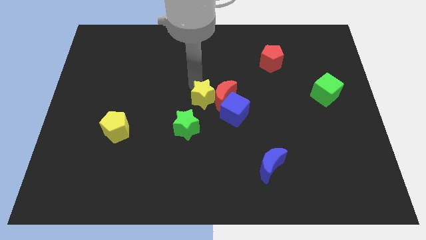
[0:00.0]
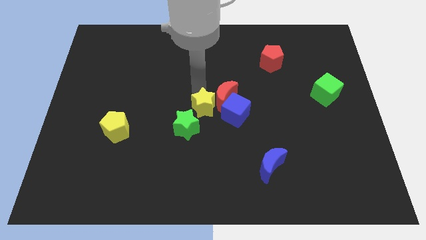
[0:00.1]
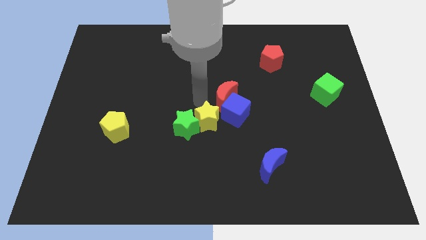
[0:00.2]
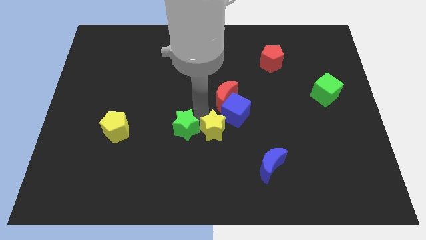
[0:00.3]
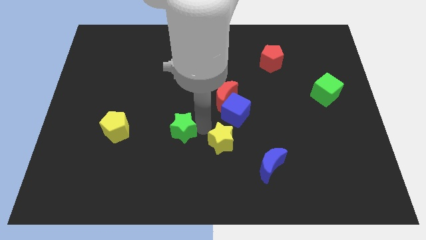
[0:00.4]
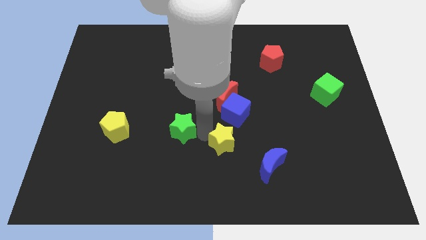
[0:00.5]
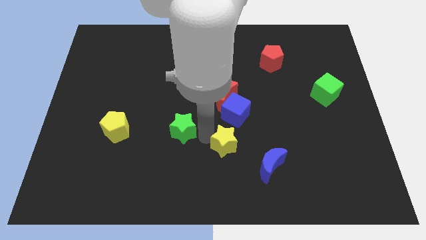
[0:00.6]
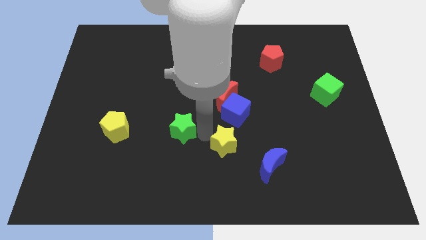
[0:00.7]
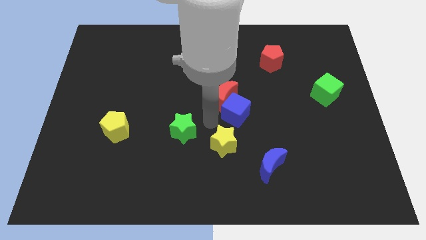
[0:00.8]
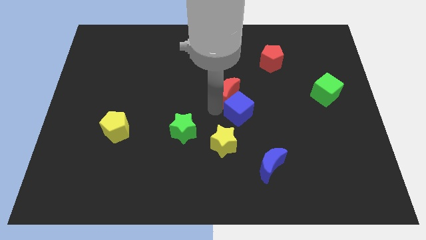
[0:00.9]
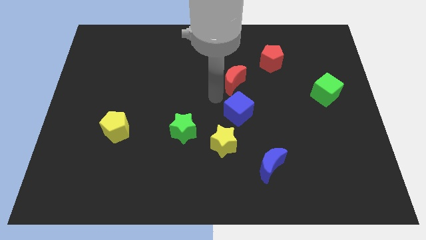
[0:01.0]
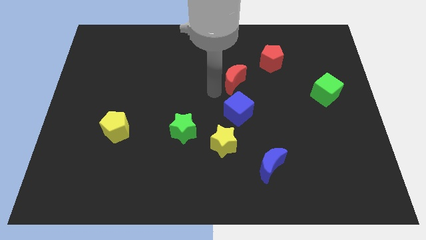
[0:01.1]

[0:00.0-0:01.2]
place the yellow star diagonal to the blue cube

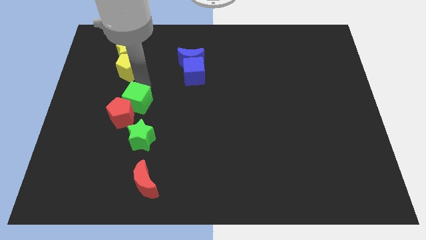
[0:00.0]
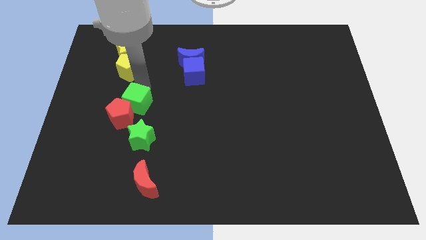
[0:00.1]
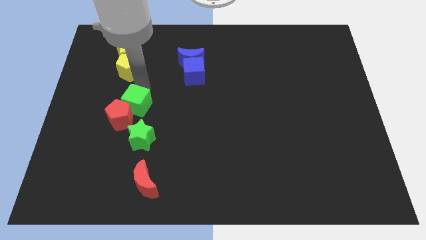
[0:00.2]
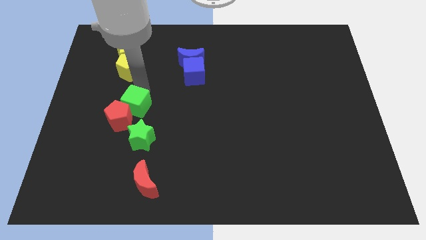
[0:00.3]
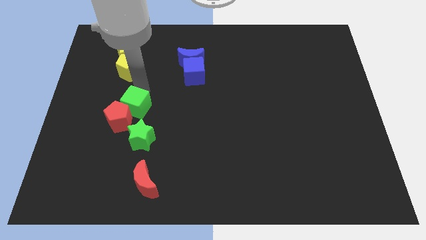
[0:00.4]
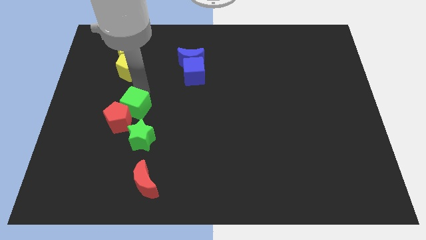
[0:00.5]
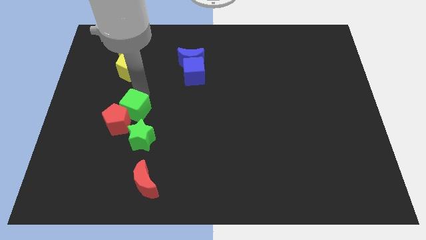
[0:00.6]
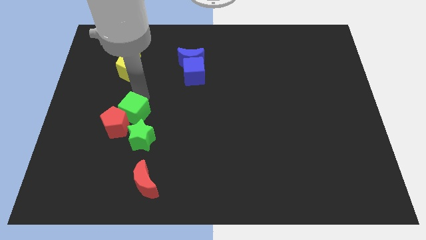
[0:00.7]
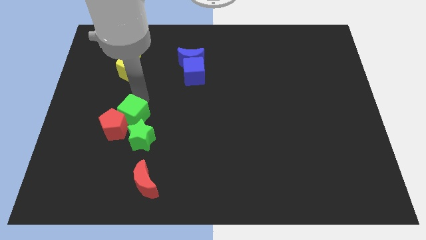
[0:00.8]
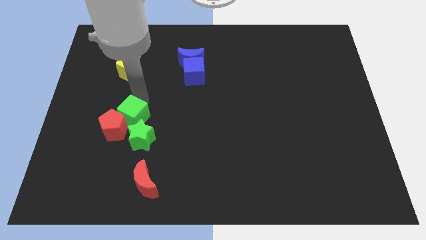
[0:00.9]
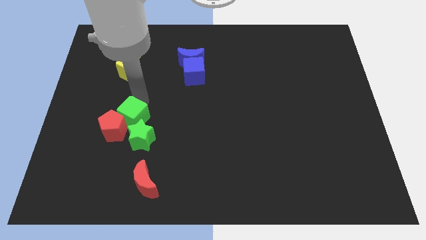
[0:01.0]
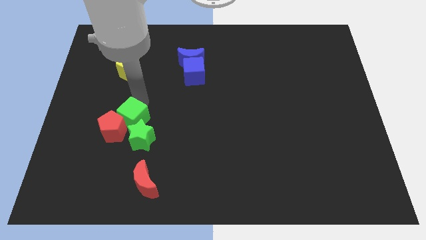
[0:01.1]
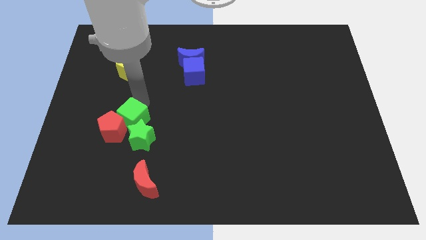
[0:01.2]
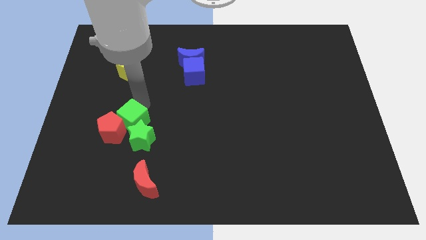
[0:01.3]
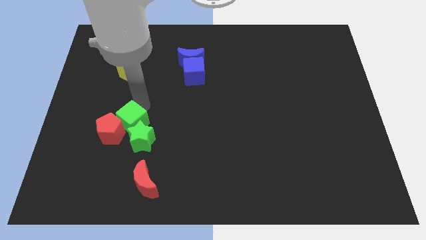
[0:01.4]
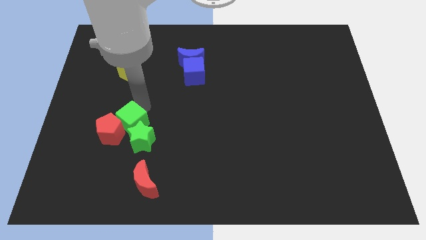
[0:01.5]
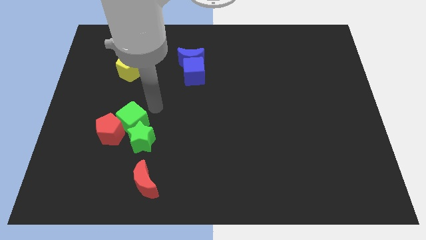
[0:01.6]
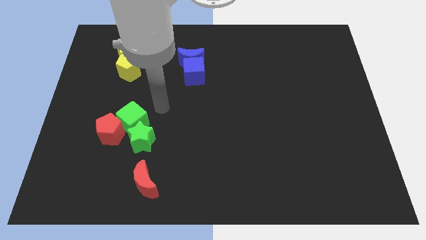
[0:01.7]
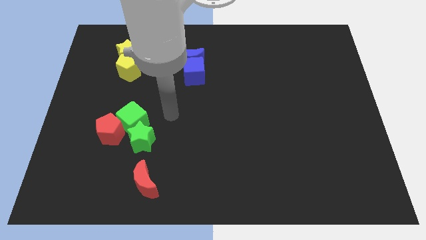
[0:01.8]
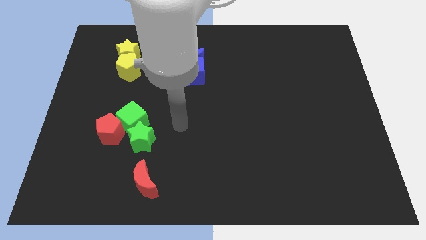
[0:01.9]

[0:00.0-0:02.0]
push the green cube above the green star

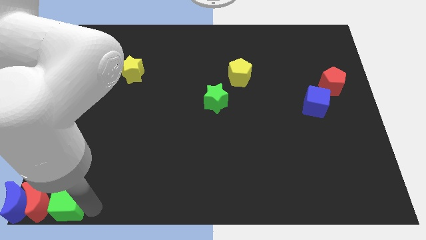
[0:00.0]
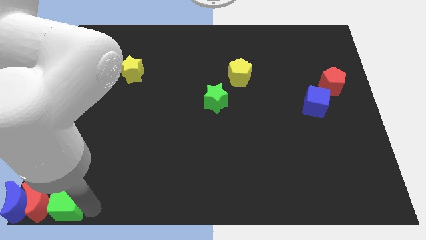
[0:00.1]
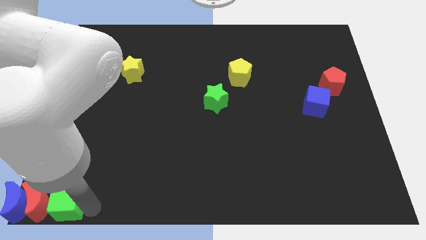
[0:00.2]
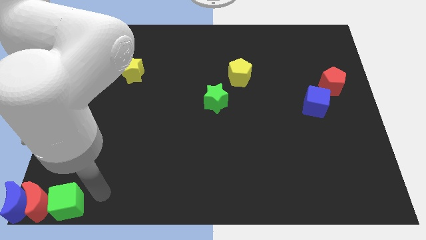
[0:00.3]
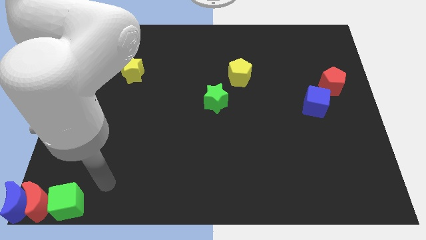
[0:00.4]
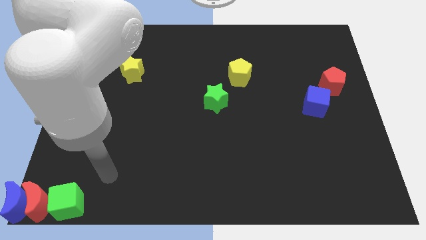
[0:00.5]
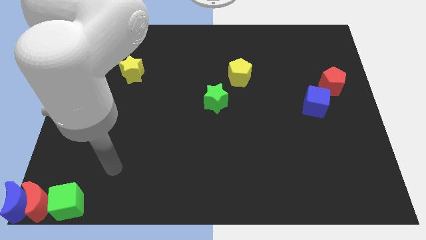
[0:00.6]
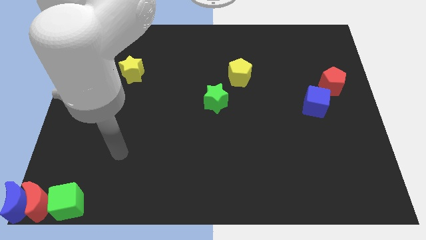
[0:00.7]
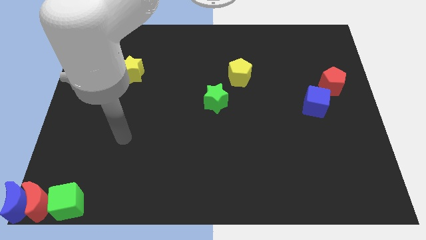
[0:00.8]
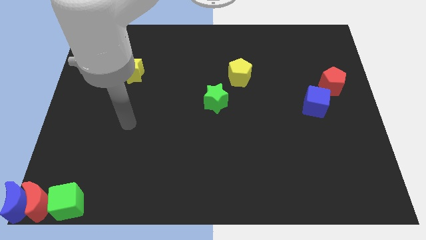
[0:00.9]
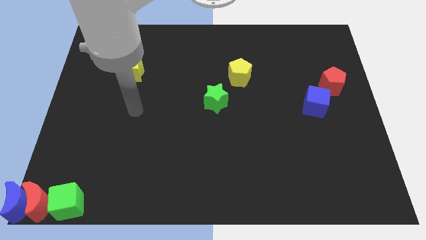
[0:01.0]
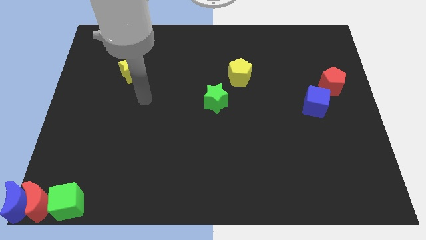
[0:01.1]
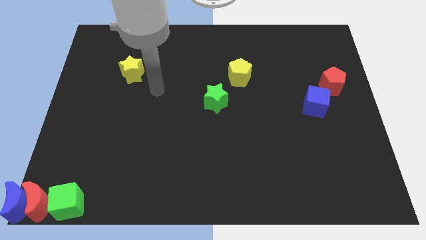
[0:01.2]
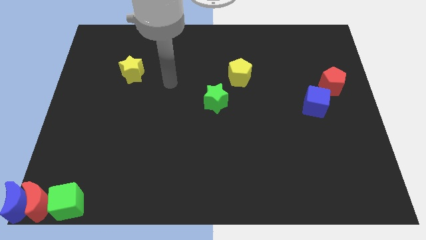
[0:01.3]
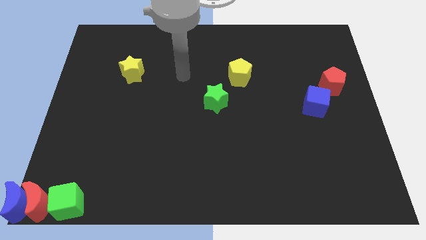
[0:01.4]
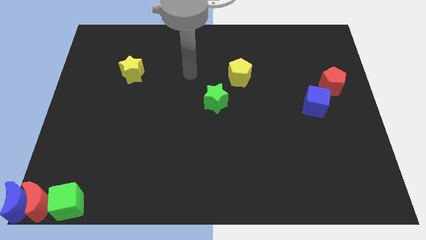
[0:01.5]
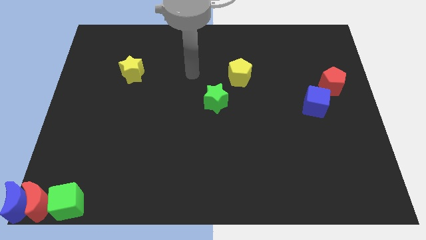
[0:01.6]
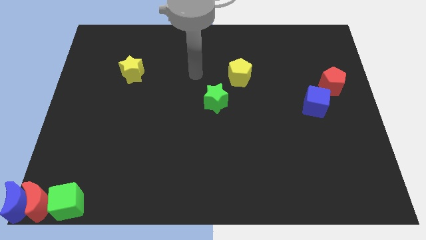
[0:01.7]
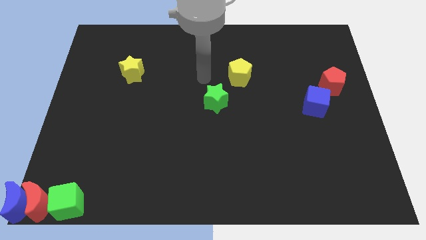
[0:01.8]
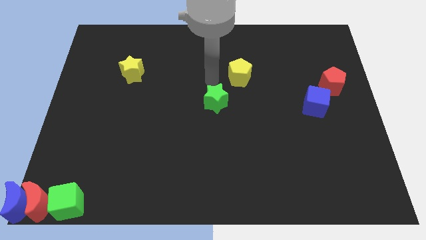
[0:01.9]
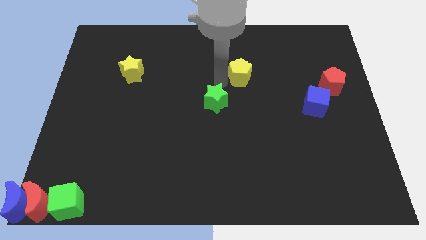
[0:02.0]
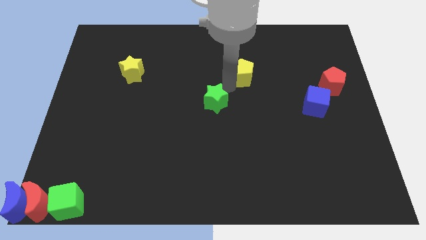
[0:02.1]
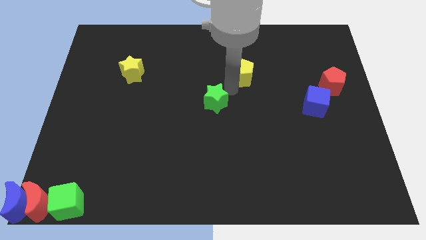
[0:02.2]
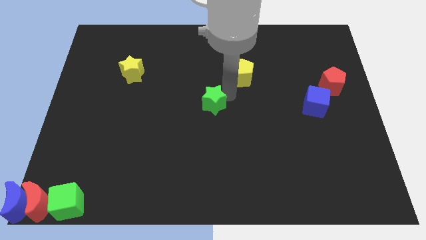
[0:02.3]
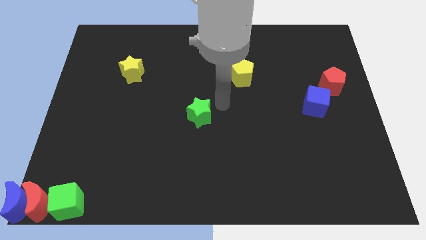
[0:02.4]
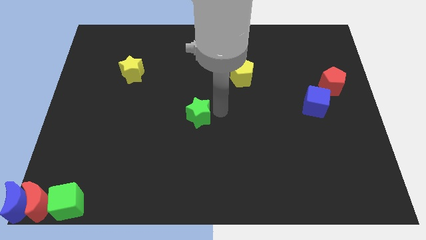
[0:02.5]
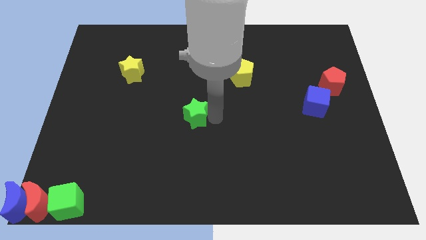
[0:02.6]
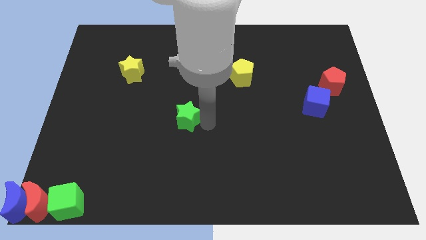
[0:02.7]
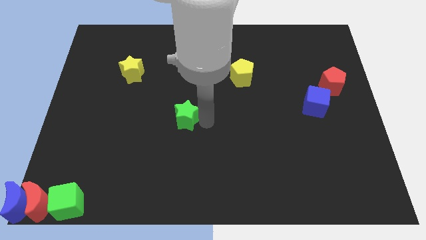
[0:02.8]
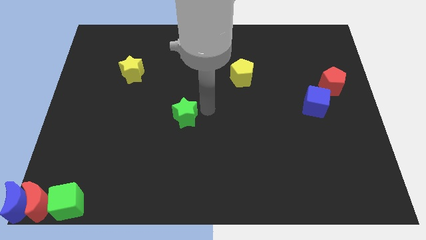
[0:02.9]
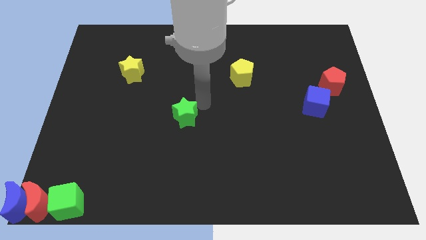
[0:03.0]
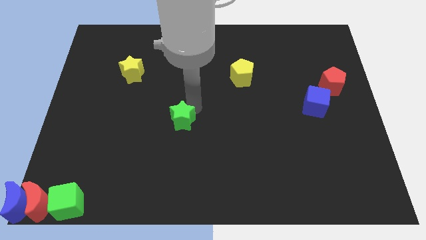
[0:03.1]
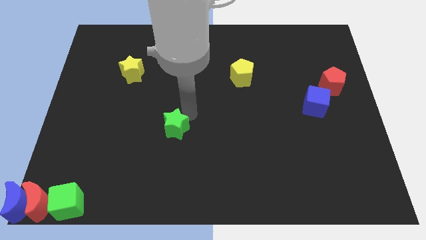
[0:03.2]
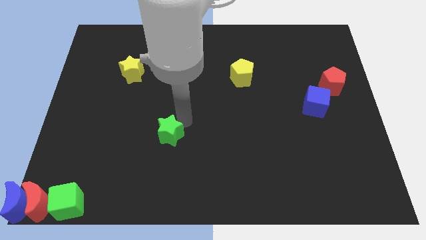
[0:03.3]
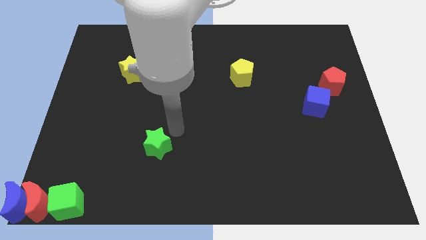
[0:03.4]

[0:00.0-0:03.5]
place the green star diagonally bottom right to the yellow star

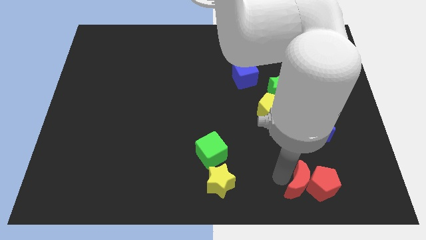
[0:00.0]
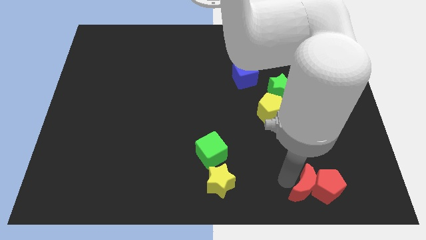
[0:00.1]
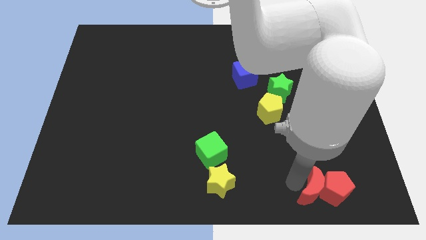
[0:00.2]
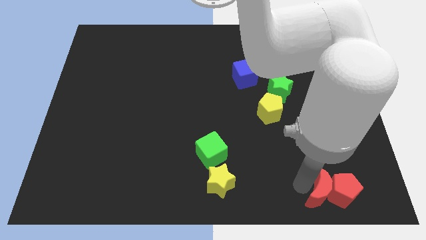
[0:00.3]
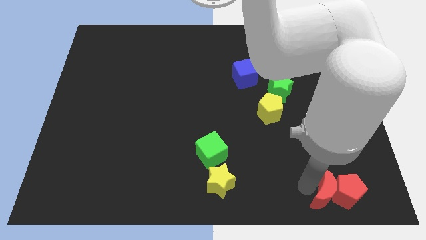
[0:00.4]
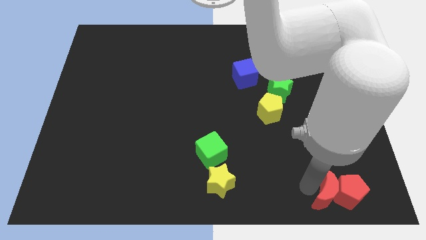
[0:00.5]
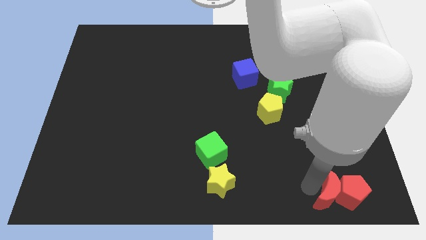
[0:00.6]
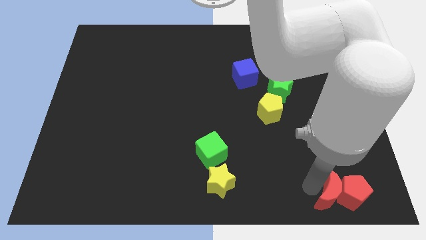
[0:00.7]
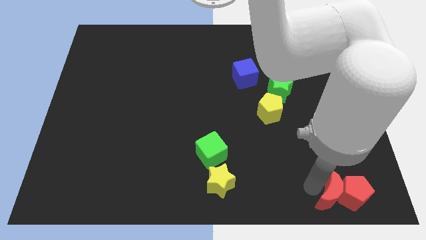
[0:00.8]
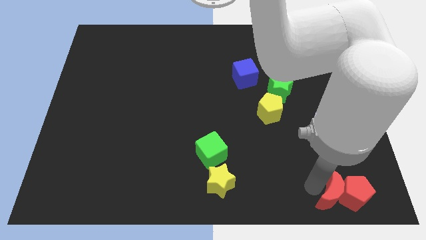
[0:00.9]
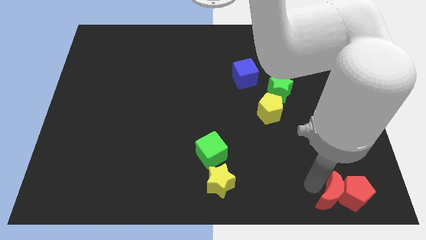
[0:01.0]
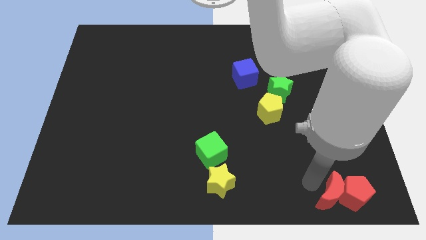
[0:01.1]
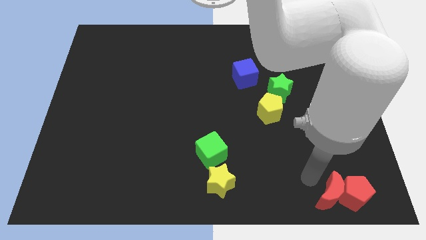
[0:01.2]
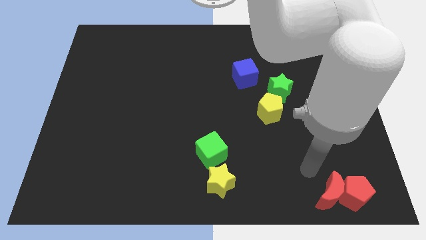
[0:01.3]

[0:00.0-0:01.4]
drag the red moon to the left side of the board

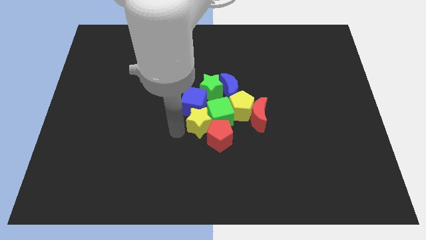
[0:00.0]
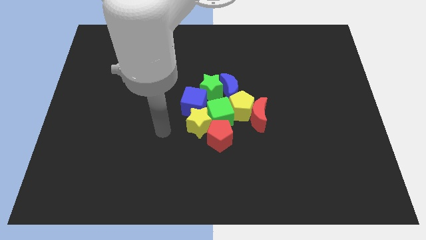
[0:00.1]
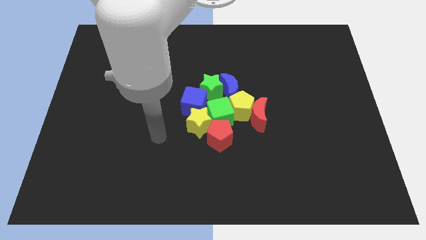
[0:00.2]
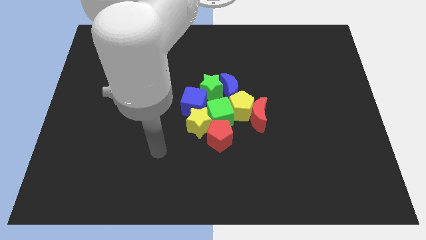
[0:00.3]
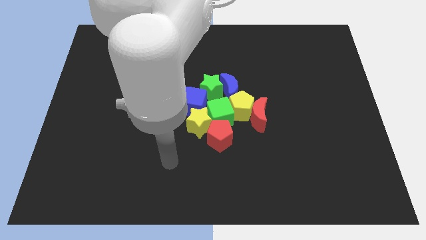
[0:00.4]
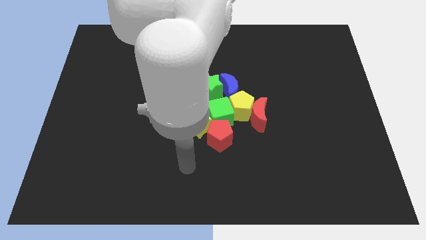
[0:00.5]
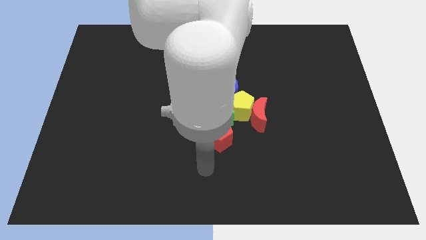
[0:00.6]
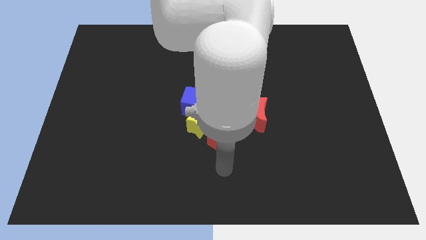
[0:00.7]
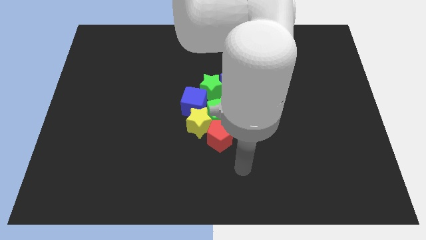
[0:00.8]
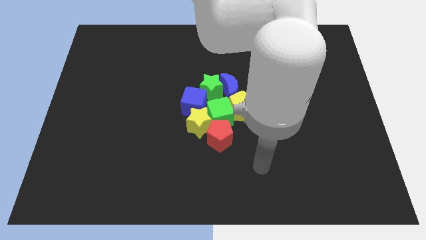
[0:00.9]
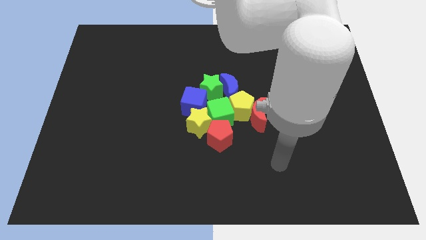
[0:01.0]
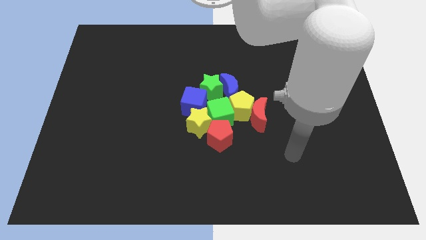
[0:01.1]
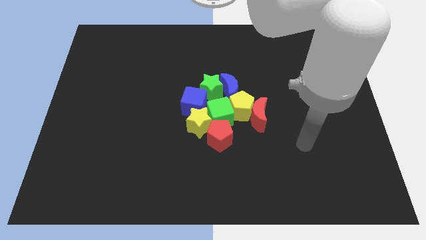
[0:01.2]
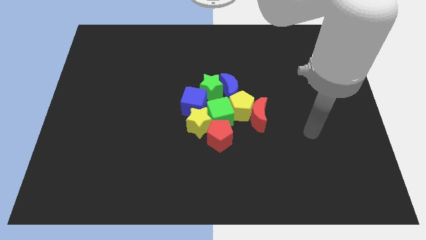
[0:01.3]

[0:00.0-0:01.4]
move away from the yellow star
